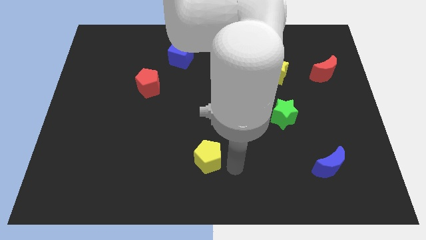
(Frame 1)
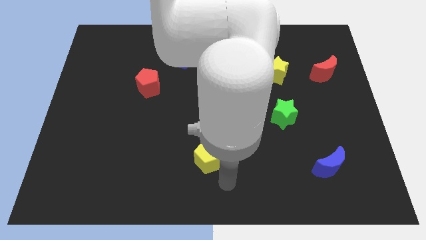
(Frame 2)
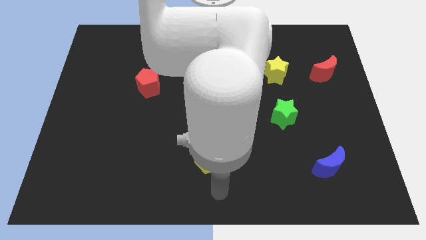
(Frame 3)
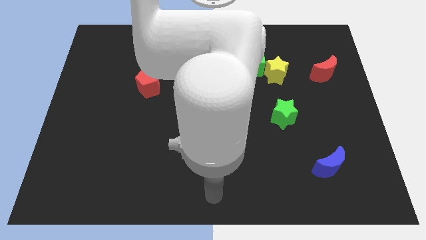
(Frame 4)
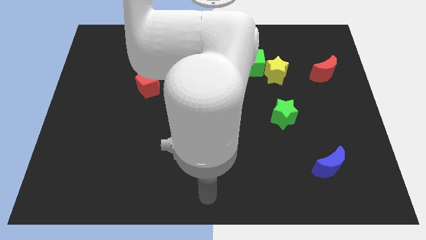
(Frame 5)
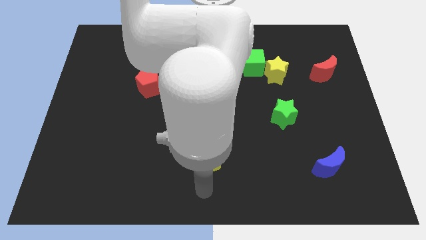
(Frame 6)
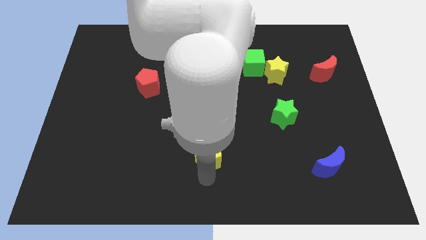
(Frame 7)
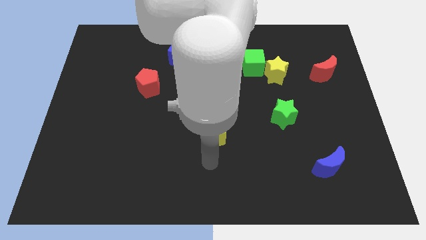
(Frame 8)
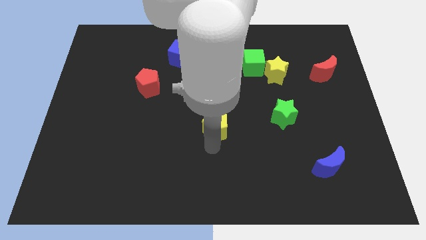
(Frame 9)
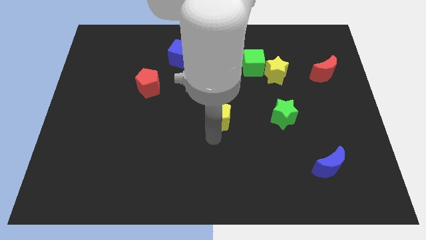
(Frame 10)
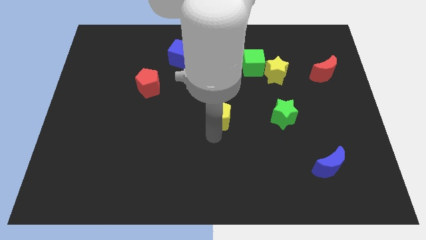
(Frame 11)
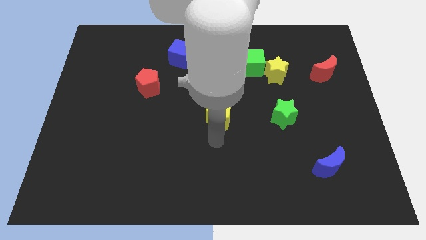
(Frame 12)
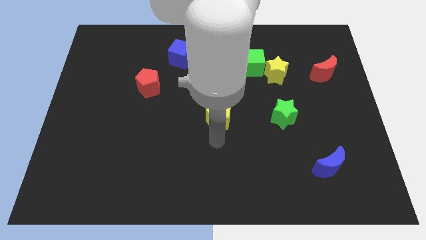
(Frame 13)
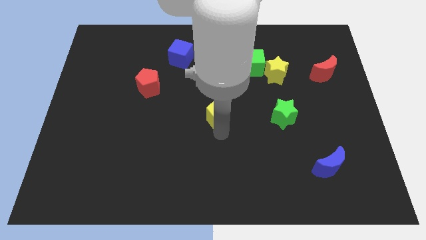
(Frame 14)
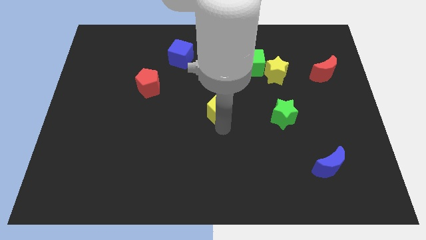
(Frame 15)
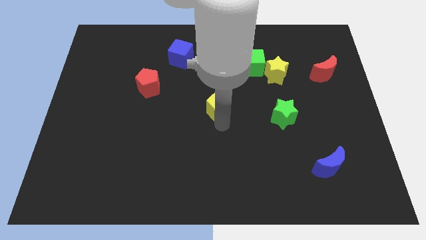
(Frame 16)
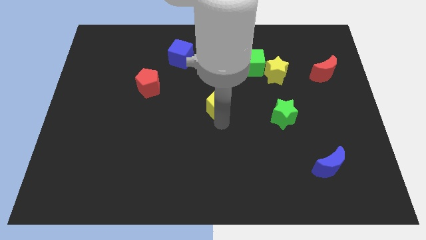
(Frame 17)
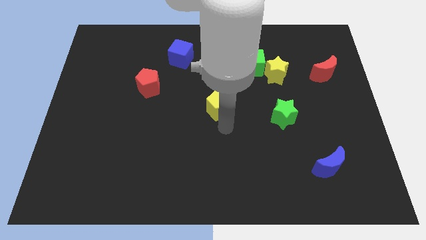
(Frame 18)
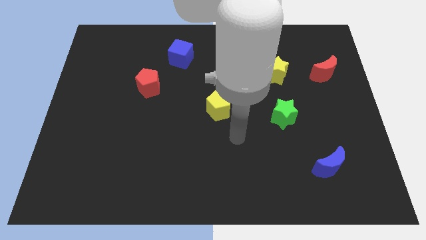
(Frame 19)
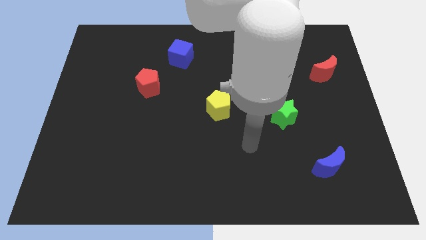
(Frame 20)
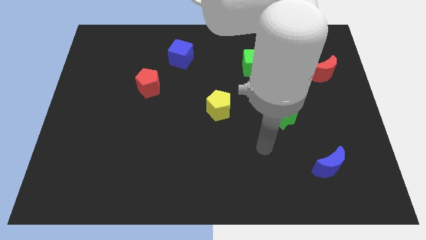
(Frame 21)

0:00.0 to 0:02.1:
move the yellow pentagon to the center of the board

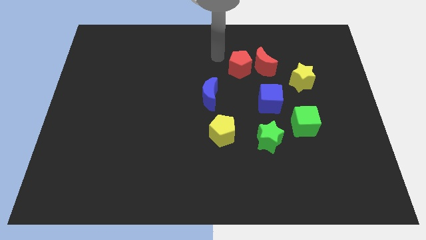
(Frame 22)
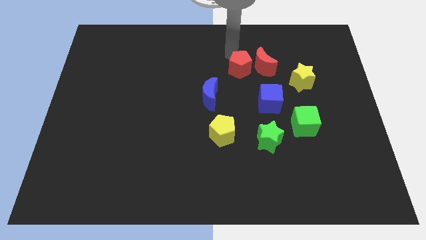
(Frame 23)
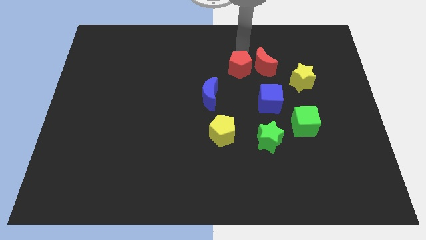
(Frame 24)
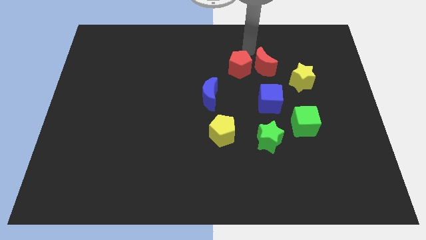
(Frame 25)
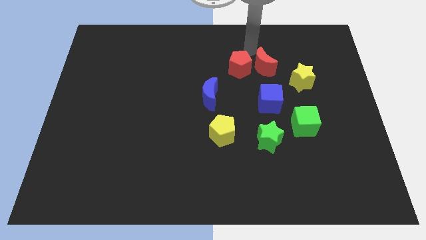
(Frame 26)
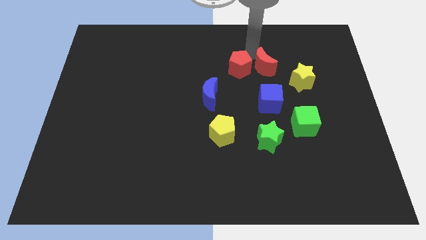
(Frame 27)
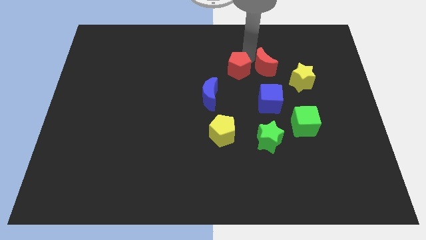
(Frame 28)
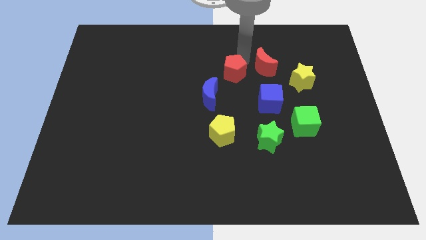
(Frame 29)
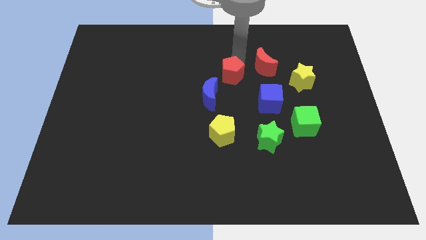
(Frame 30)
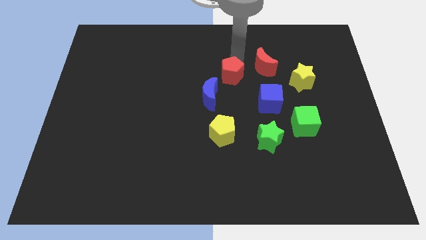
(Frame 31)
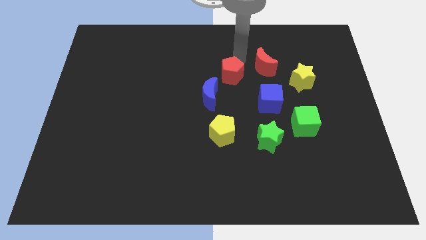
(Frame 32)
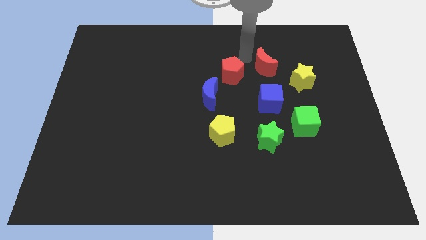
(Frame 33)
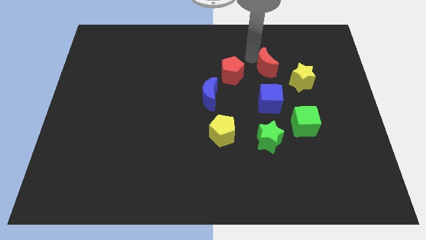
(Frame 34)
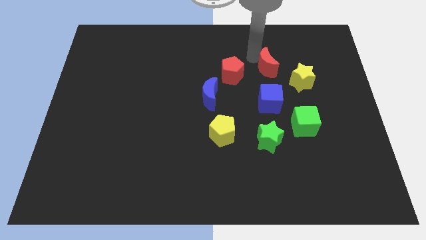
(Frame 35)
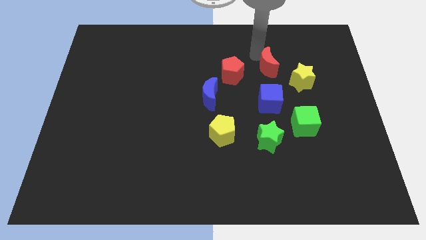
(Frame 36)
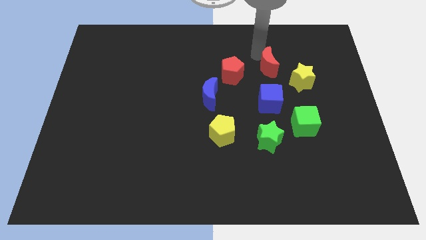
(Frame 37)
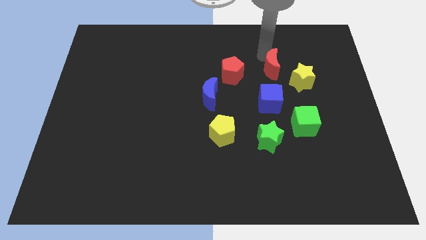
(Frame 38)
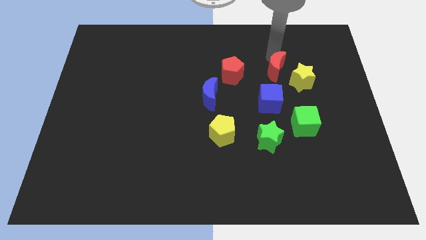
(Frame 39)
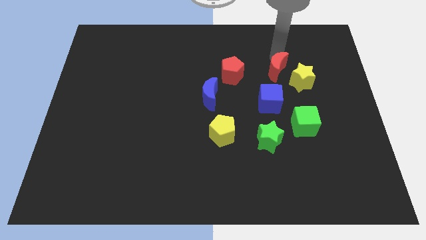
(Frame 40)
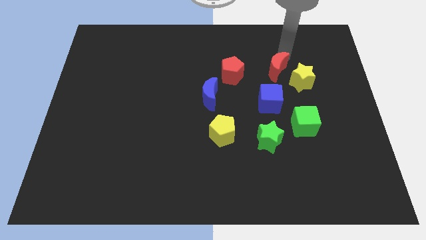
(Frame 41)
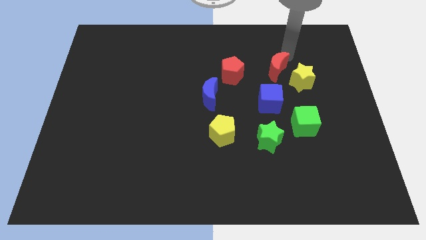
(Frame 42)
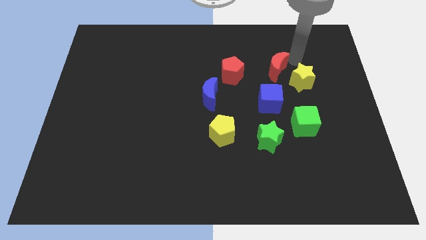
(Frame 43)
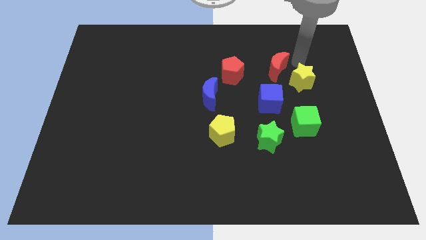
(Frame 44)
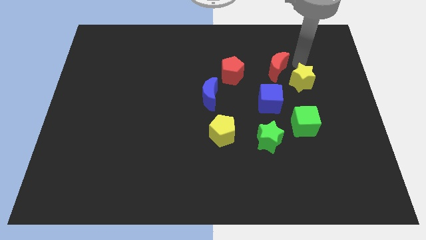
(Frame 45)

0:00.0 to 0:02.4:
move red moon left above yellow star

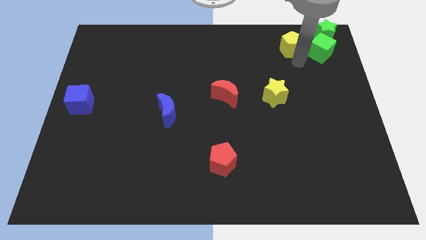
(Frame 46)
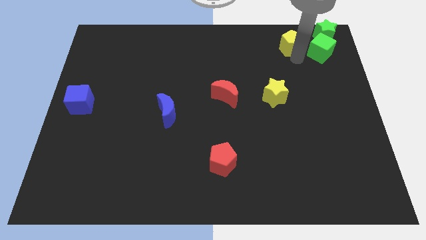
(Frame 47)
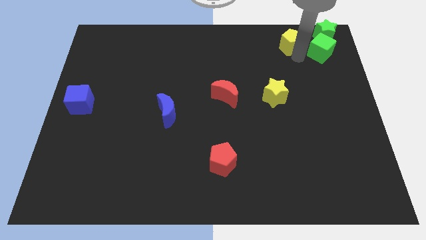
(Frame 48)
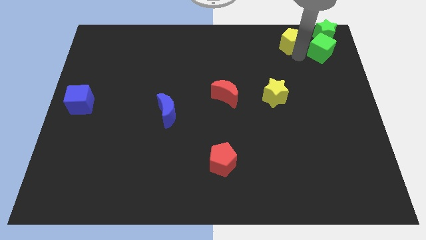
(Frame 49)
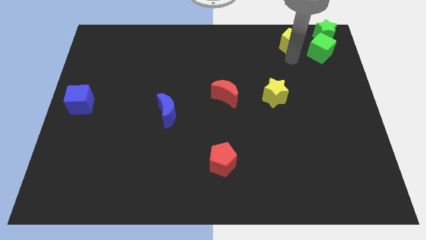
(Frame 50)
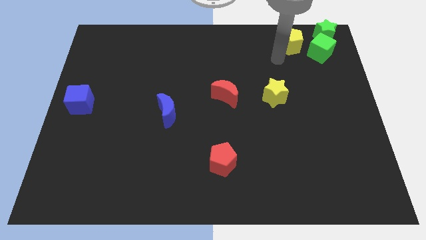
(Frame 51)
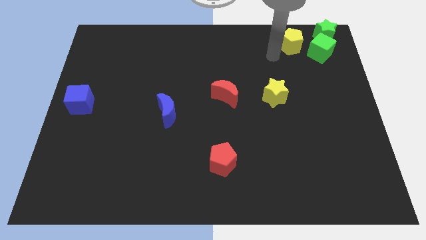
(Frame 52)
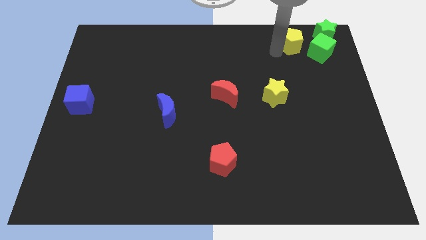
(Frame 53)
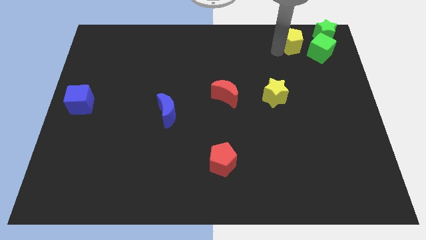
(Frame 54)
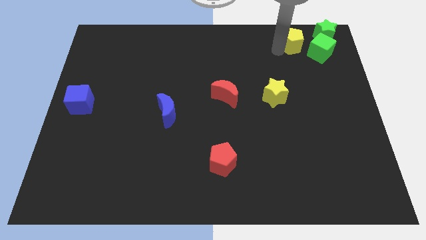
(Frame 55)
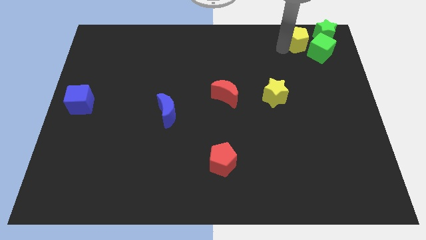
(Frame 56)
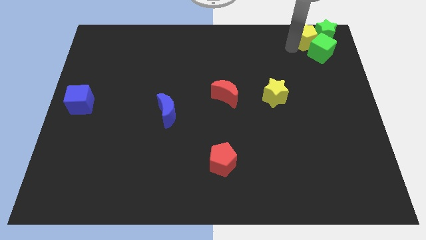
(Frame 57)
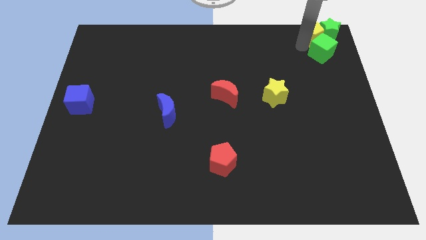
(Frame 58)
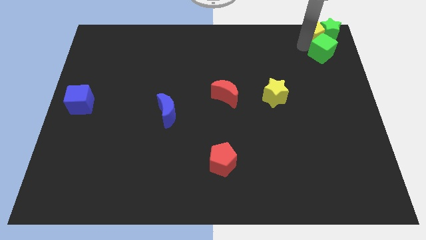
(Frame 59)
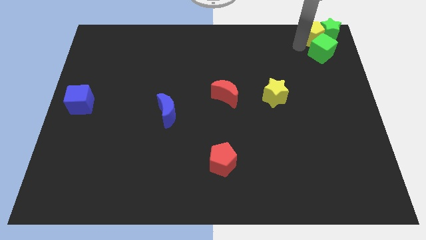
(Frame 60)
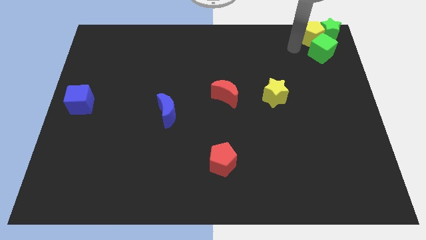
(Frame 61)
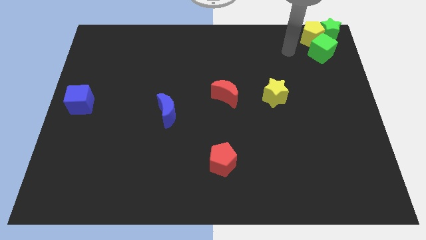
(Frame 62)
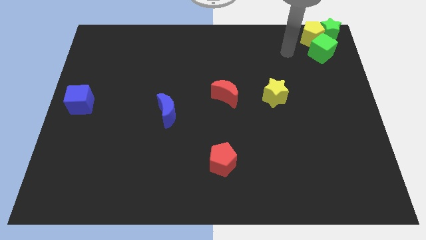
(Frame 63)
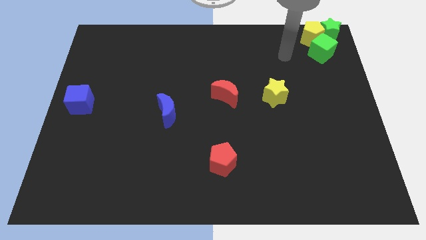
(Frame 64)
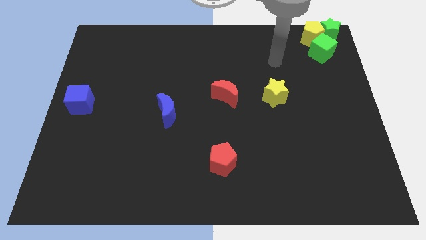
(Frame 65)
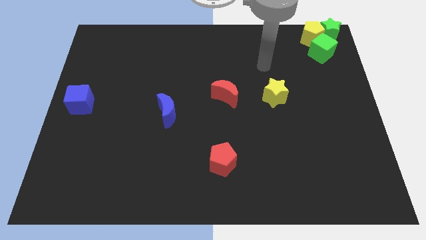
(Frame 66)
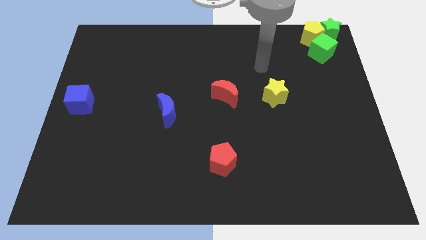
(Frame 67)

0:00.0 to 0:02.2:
move the yellow pentagon into the green star

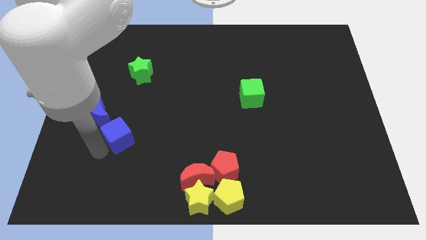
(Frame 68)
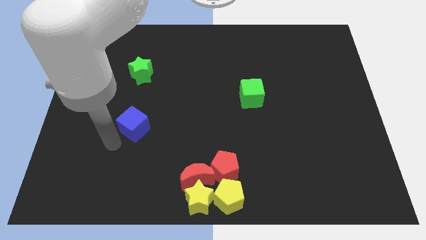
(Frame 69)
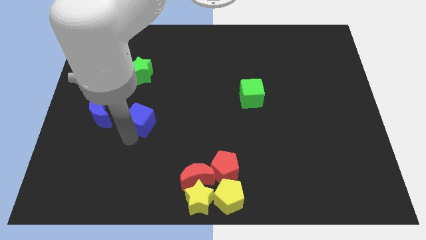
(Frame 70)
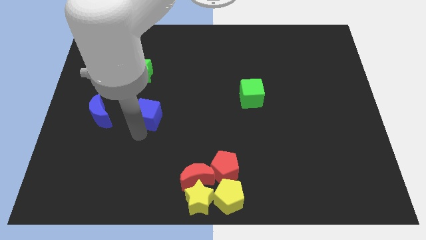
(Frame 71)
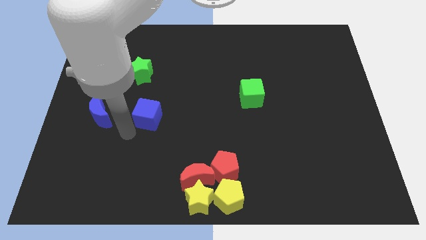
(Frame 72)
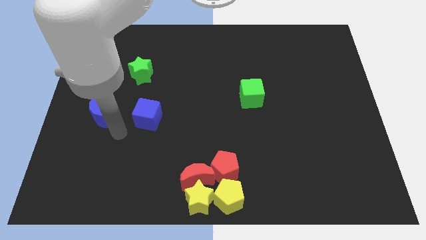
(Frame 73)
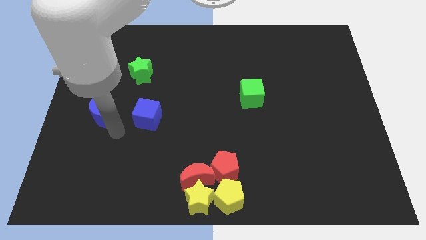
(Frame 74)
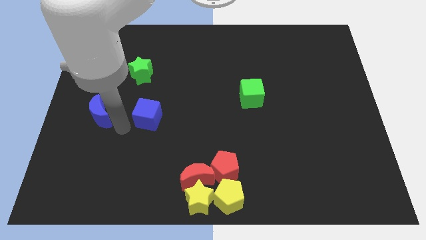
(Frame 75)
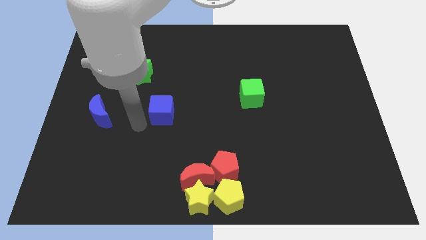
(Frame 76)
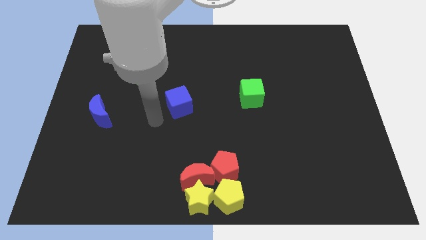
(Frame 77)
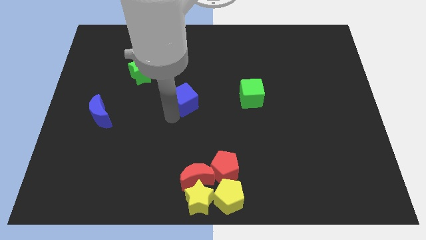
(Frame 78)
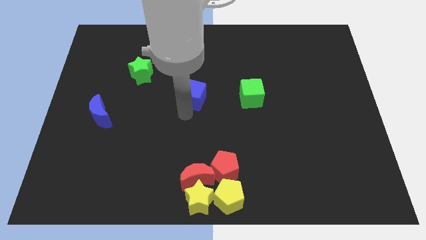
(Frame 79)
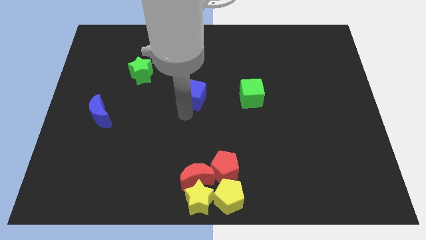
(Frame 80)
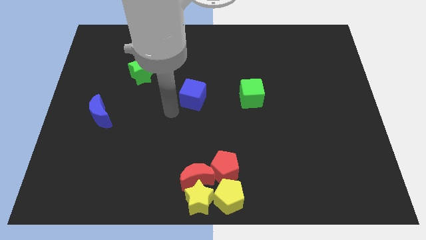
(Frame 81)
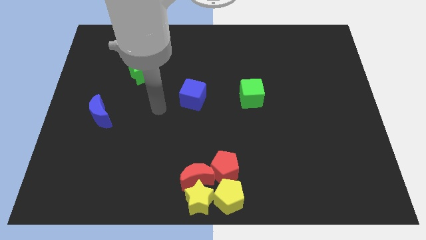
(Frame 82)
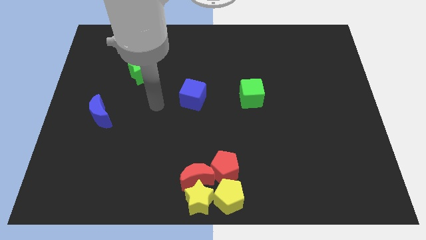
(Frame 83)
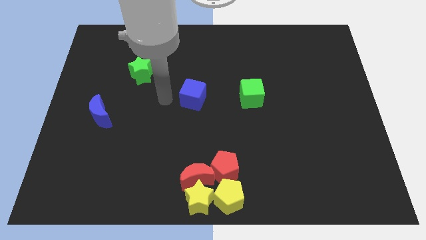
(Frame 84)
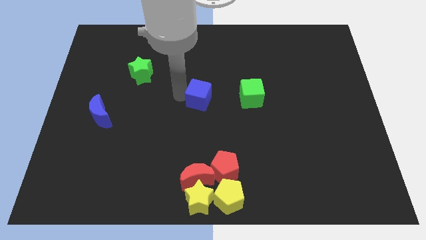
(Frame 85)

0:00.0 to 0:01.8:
push the blue cube horizontally to the left side of the green cube

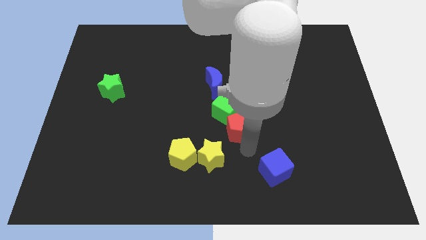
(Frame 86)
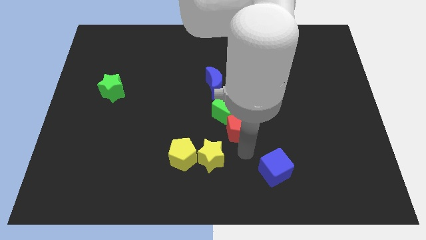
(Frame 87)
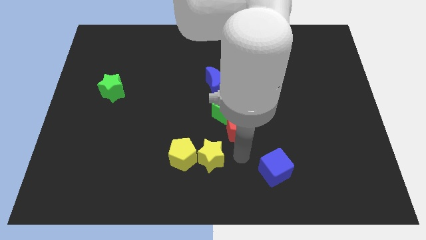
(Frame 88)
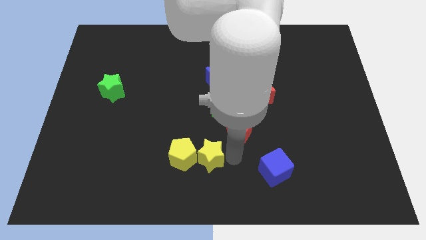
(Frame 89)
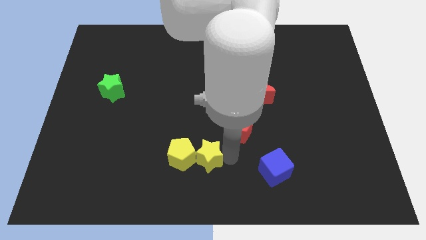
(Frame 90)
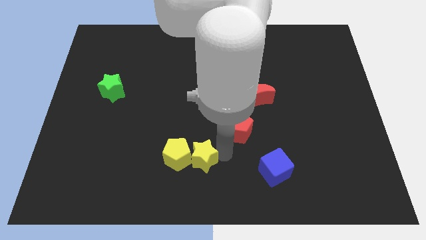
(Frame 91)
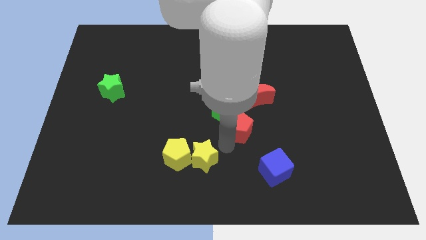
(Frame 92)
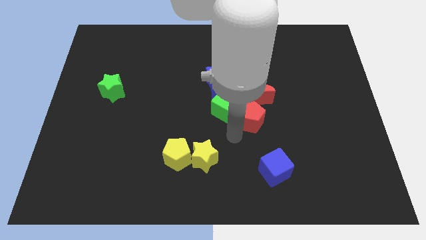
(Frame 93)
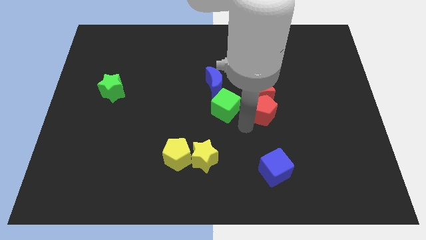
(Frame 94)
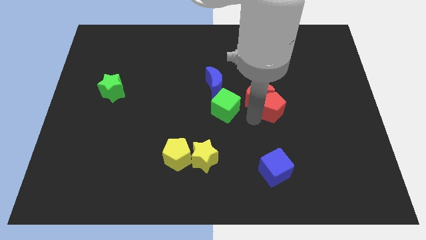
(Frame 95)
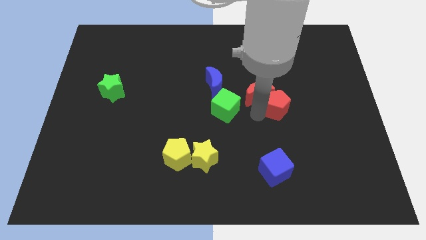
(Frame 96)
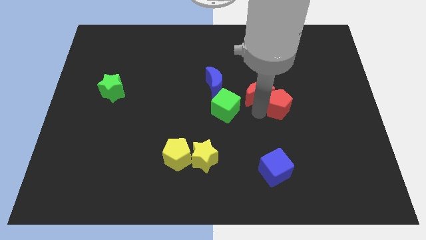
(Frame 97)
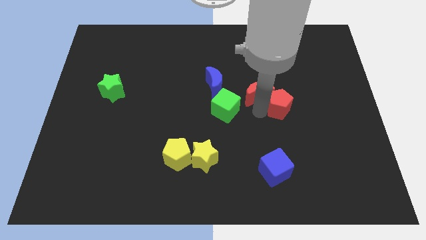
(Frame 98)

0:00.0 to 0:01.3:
push the red pentagon into the red crescent
